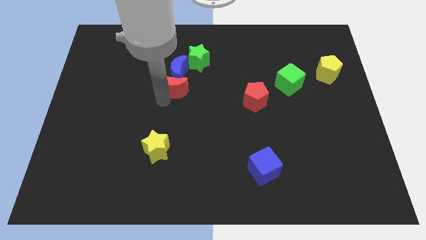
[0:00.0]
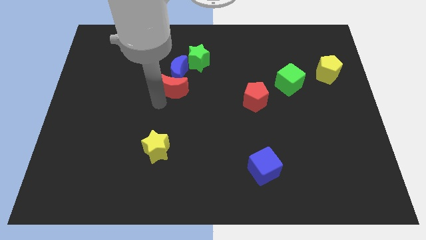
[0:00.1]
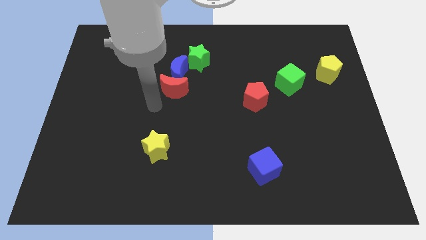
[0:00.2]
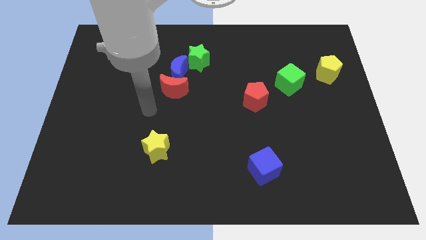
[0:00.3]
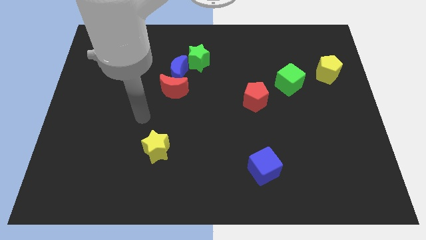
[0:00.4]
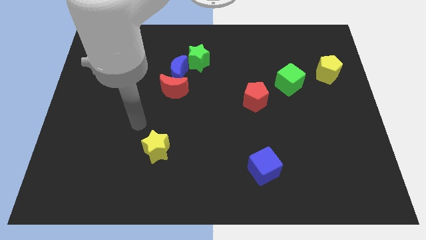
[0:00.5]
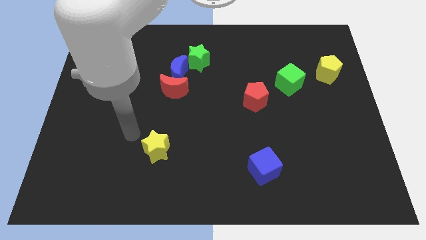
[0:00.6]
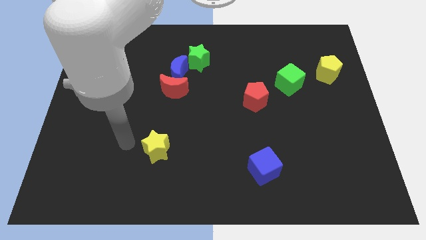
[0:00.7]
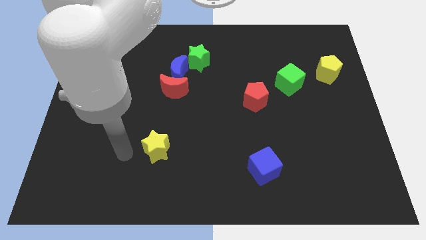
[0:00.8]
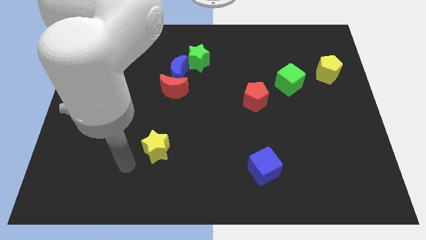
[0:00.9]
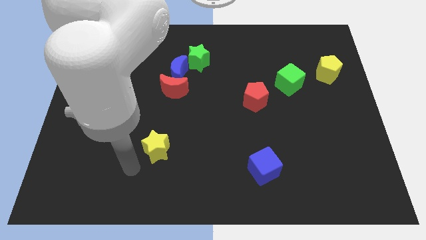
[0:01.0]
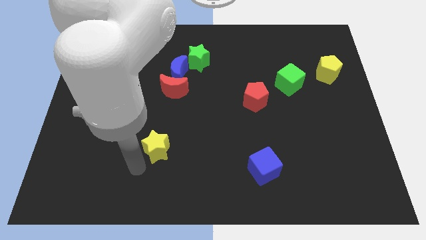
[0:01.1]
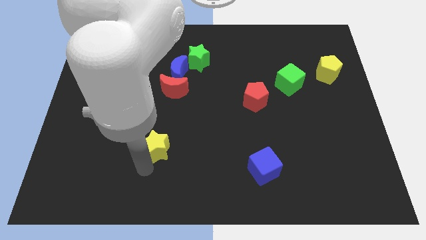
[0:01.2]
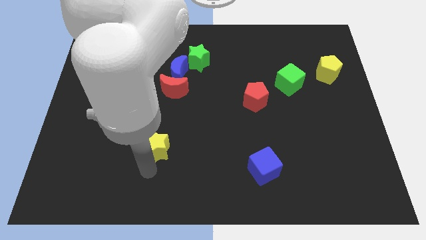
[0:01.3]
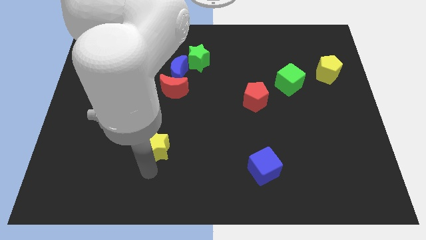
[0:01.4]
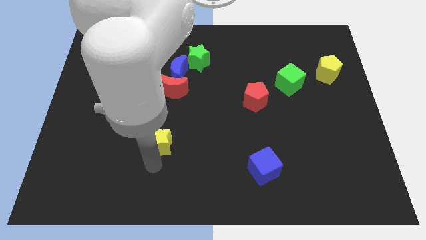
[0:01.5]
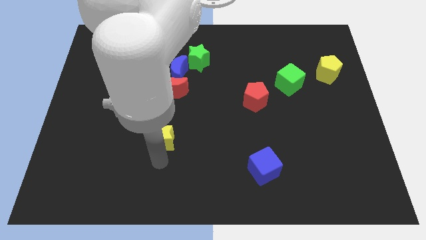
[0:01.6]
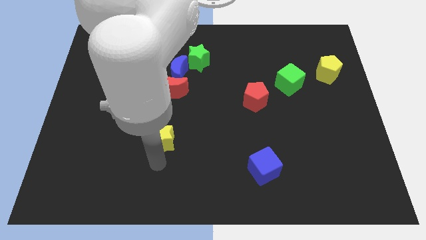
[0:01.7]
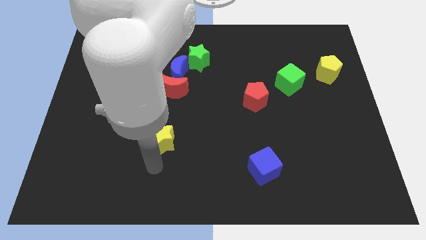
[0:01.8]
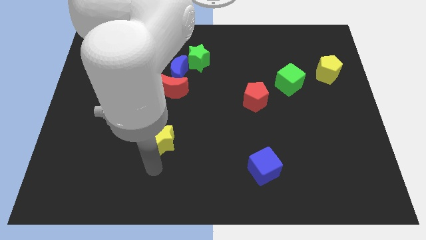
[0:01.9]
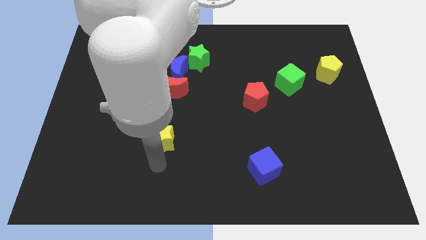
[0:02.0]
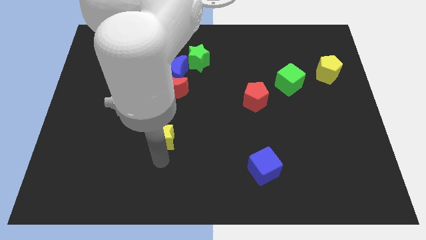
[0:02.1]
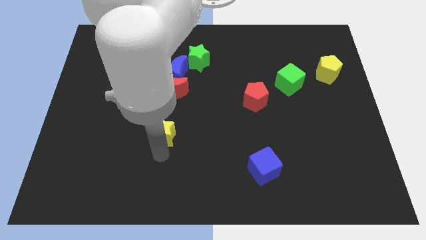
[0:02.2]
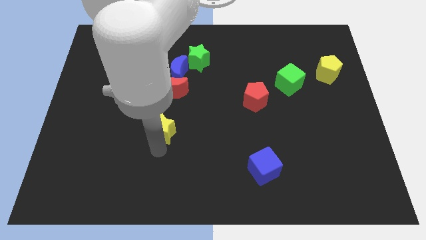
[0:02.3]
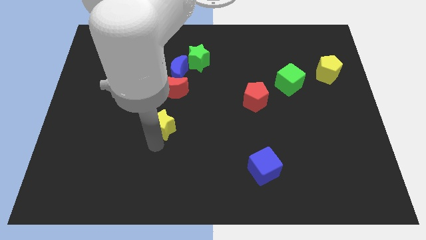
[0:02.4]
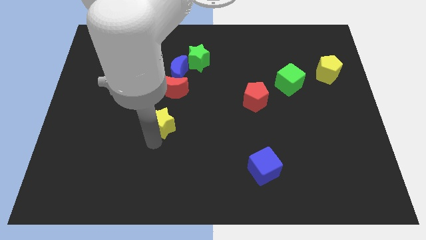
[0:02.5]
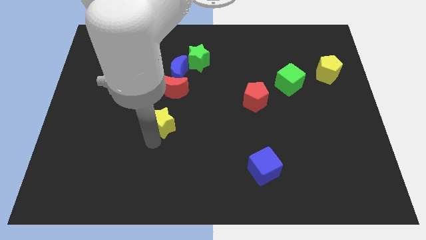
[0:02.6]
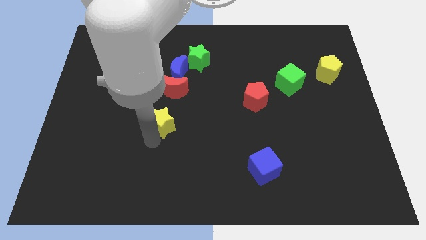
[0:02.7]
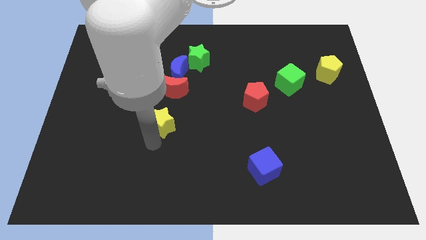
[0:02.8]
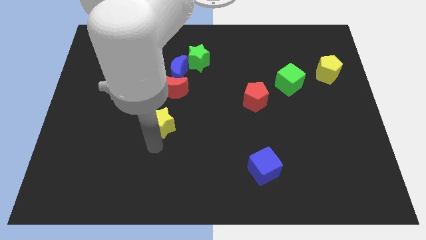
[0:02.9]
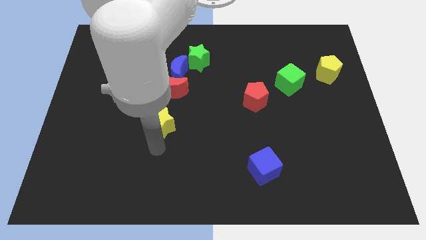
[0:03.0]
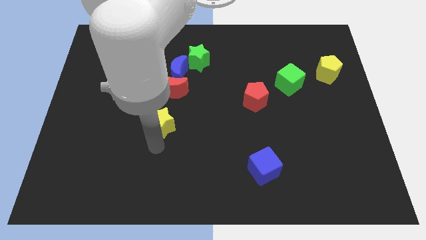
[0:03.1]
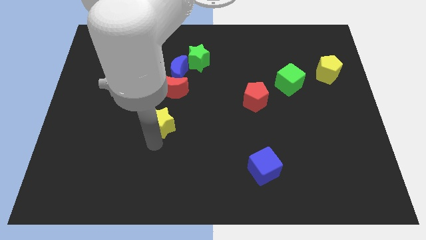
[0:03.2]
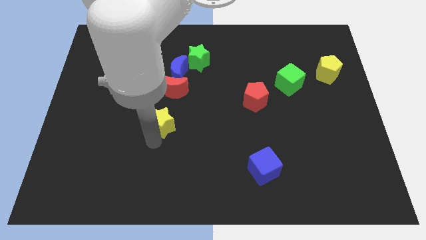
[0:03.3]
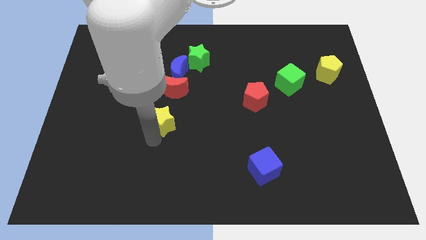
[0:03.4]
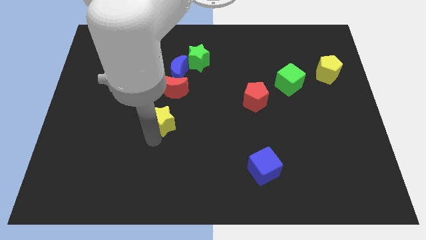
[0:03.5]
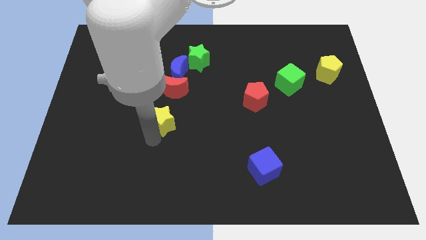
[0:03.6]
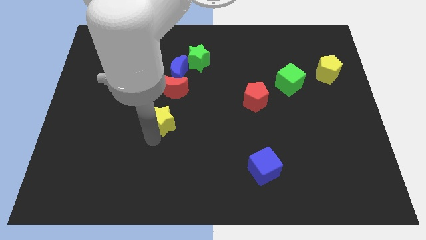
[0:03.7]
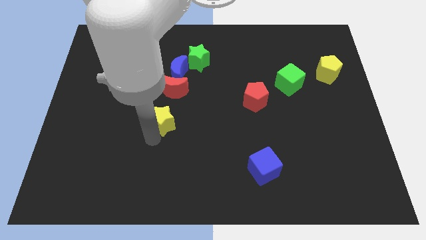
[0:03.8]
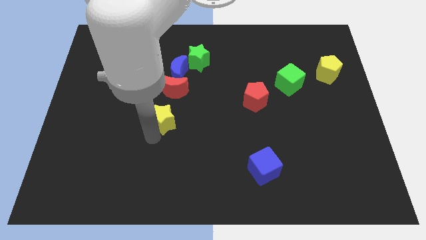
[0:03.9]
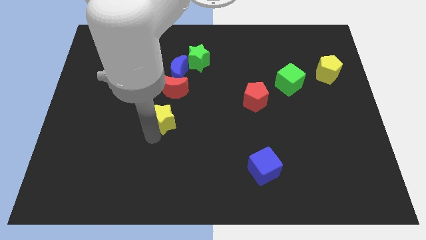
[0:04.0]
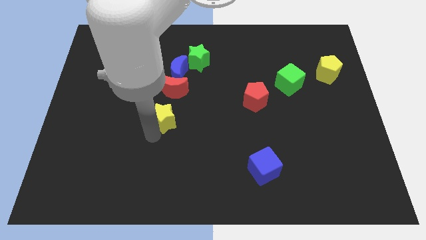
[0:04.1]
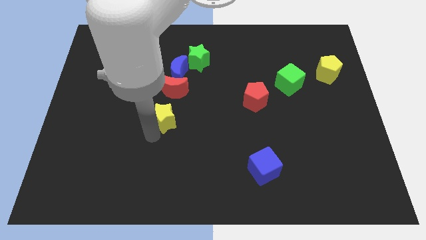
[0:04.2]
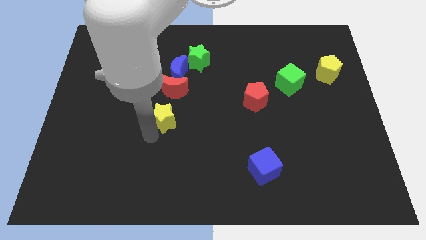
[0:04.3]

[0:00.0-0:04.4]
move the yellow star up slightly to the center of board

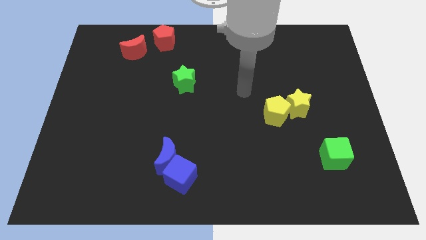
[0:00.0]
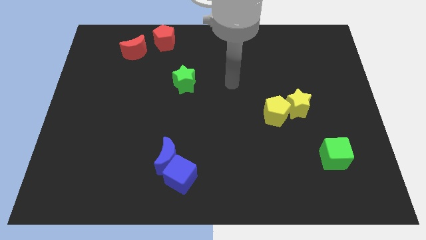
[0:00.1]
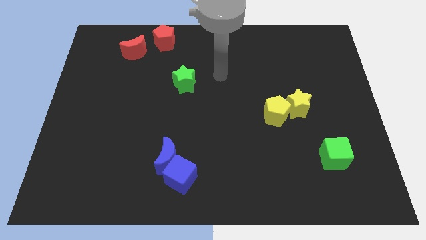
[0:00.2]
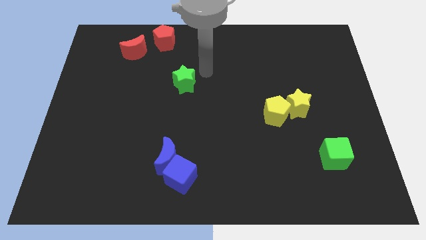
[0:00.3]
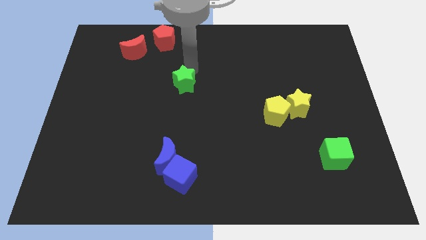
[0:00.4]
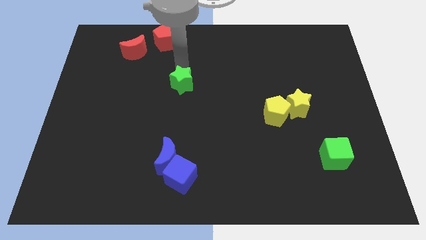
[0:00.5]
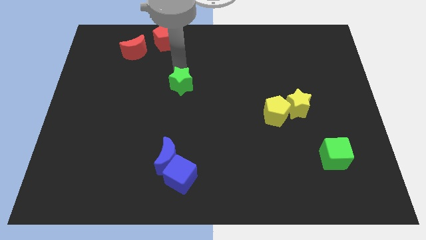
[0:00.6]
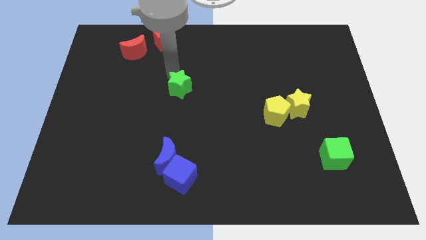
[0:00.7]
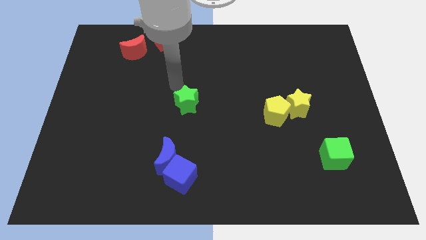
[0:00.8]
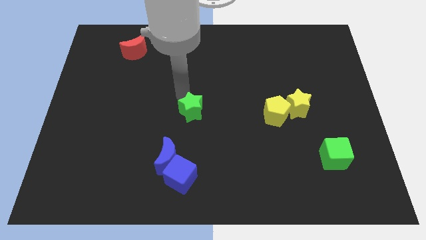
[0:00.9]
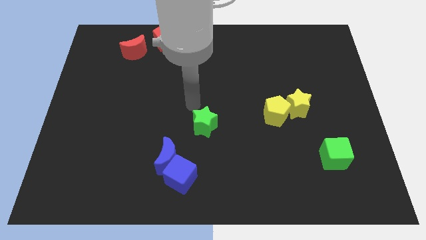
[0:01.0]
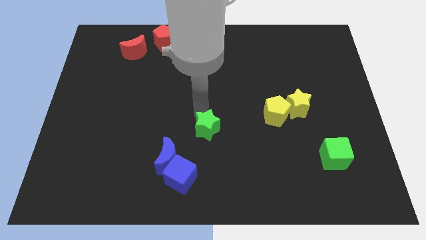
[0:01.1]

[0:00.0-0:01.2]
move green star to the top right of blue cube

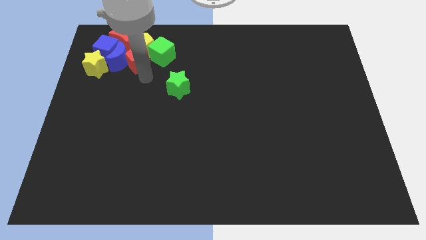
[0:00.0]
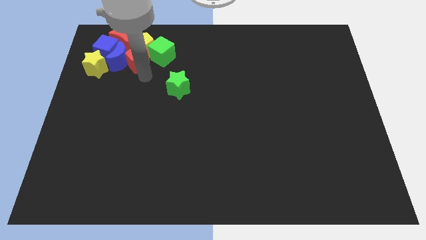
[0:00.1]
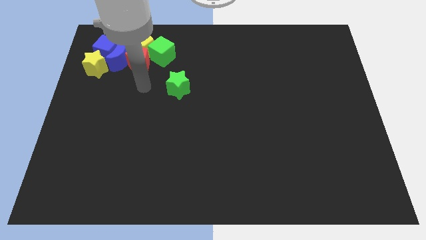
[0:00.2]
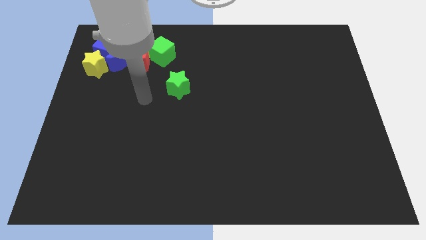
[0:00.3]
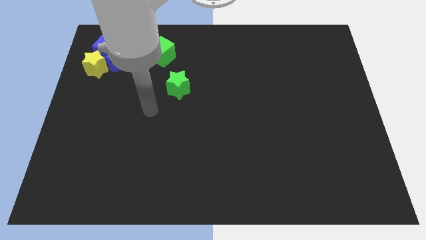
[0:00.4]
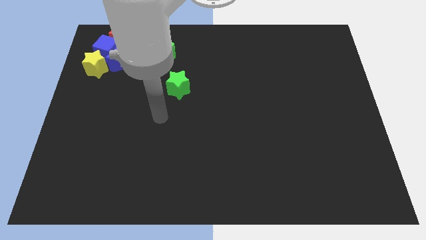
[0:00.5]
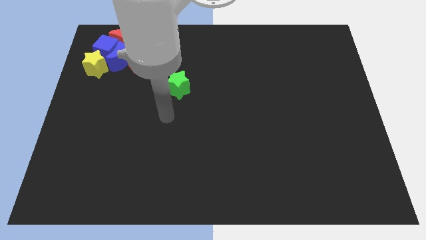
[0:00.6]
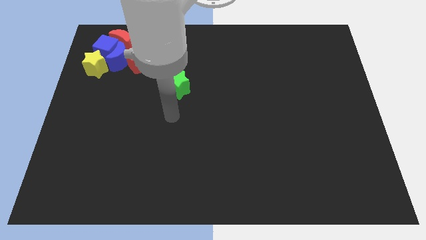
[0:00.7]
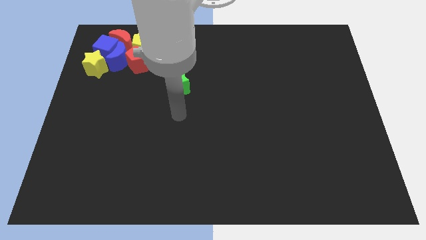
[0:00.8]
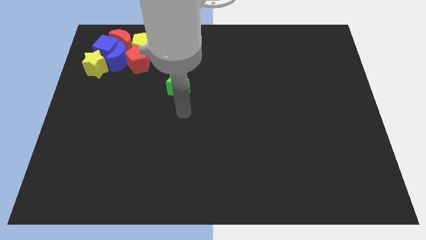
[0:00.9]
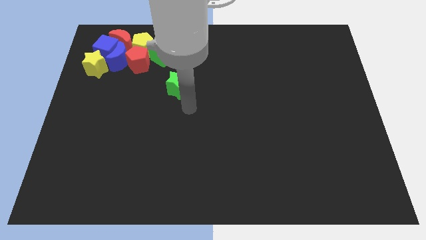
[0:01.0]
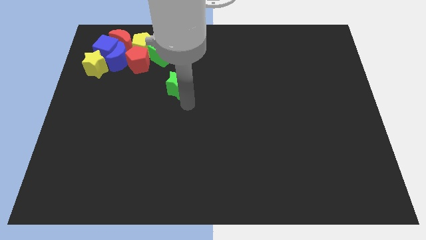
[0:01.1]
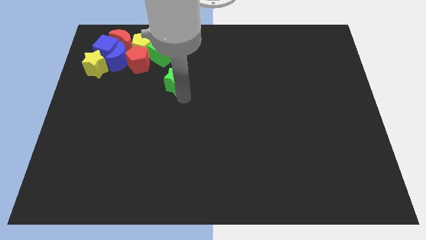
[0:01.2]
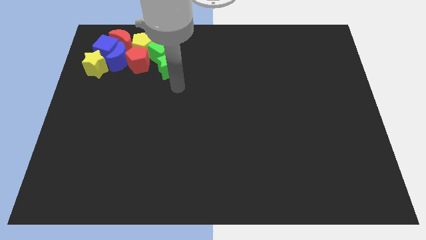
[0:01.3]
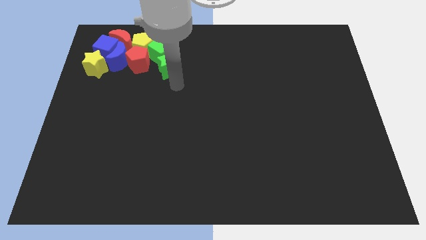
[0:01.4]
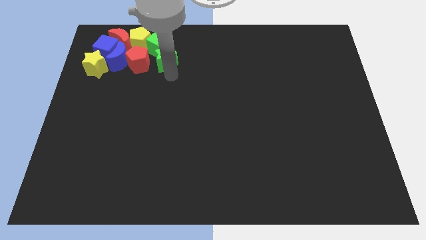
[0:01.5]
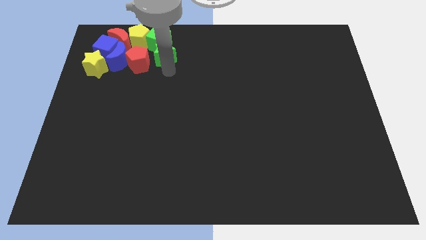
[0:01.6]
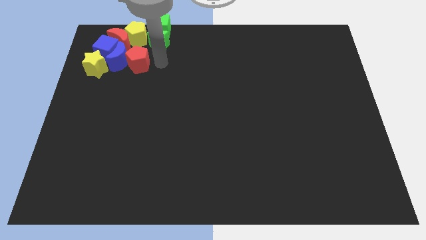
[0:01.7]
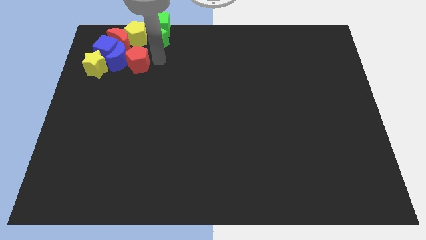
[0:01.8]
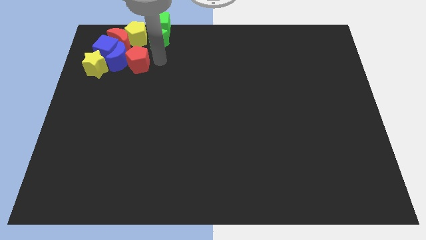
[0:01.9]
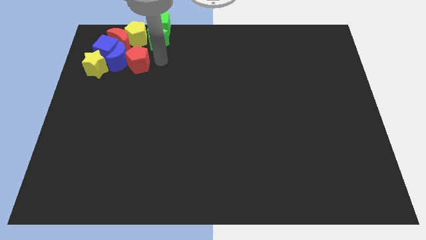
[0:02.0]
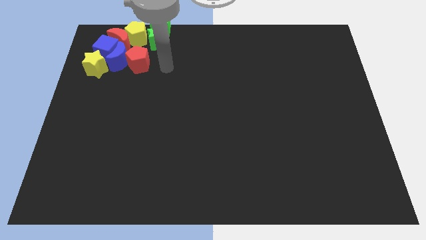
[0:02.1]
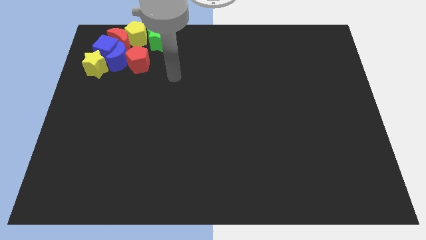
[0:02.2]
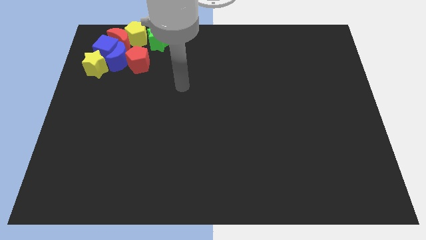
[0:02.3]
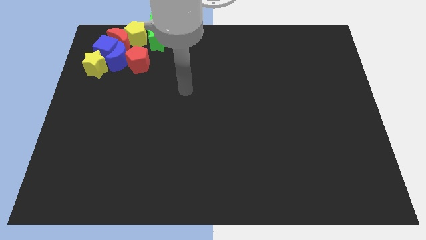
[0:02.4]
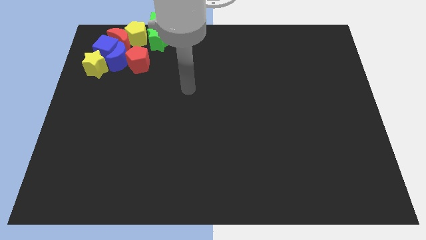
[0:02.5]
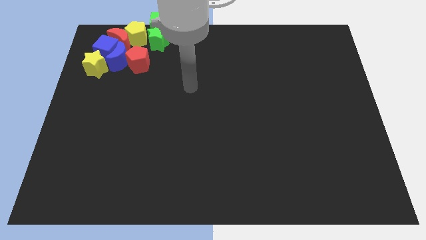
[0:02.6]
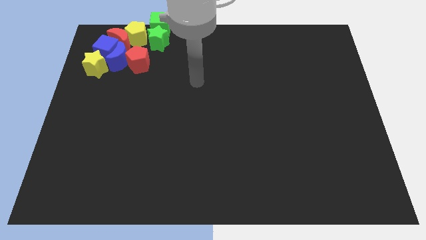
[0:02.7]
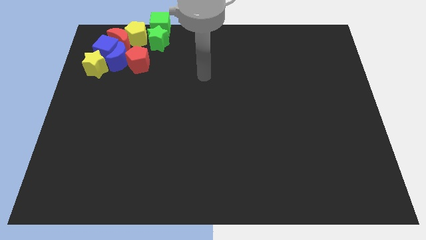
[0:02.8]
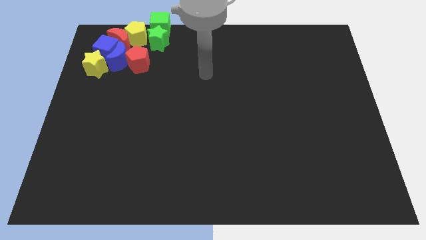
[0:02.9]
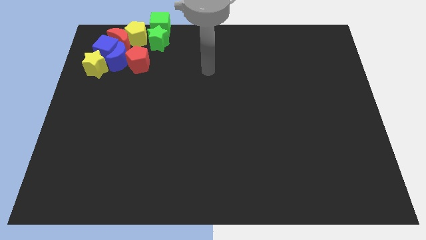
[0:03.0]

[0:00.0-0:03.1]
move the green star into the green cube
